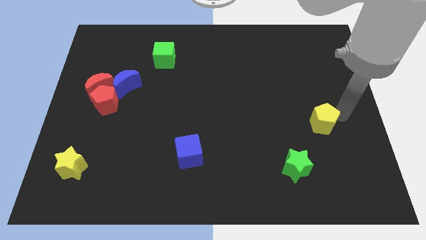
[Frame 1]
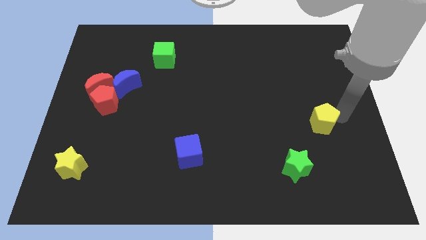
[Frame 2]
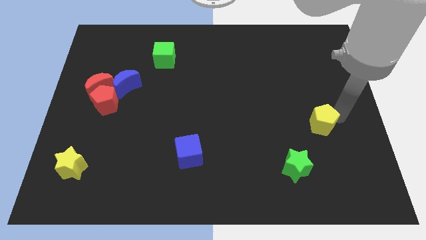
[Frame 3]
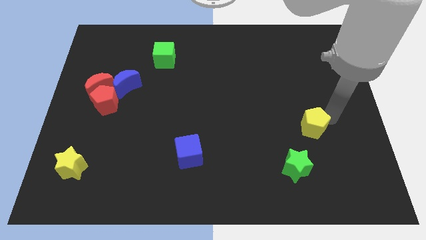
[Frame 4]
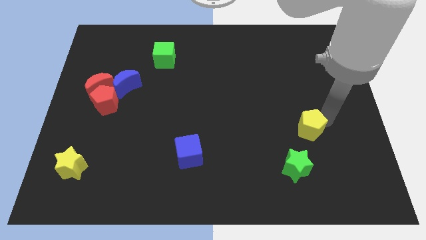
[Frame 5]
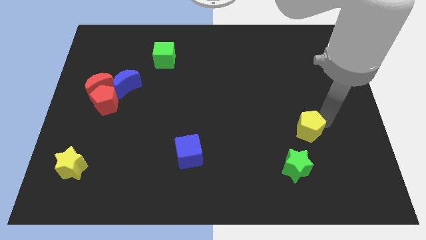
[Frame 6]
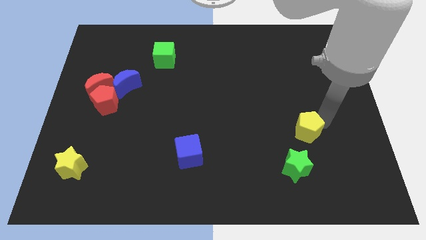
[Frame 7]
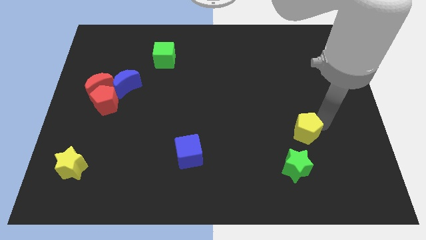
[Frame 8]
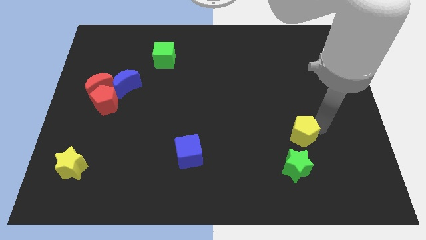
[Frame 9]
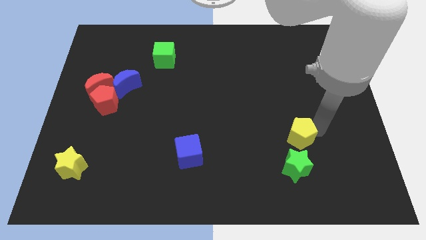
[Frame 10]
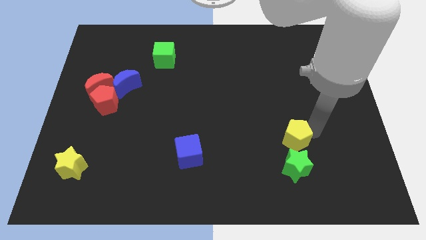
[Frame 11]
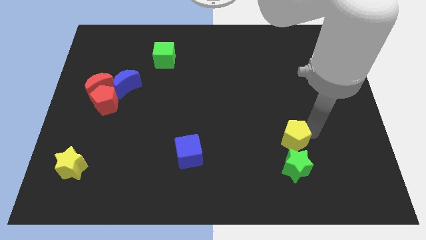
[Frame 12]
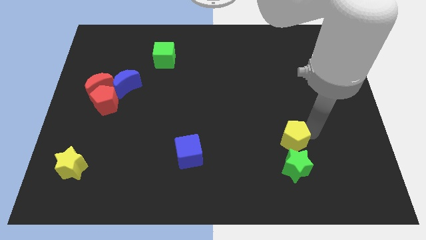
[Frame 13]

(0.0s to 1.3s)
push the yellow pentagon to the top of the green star

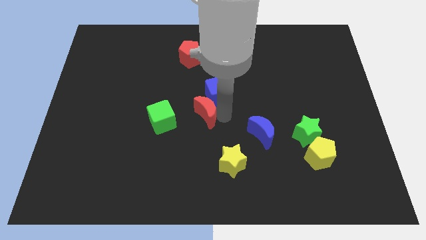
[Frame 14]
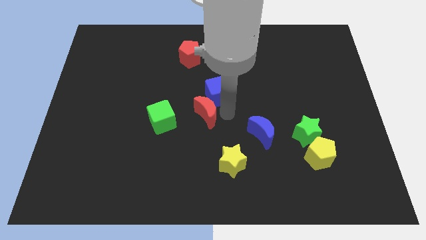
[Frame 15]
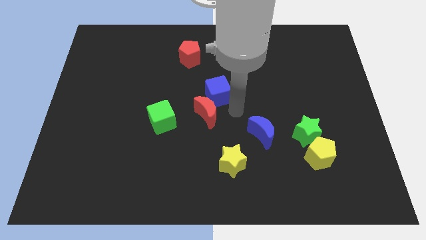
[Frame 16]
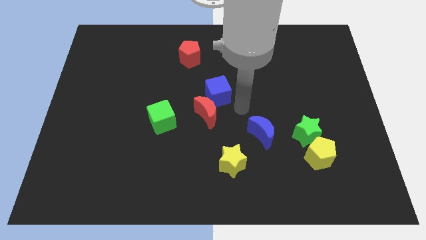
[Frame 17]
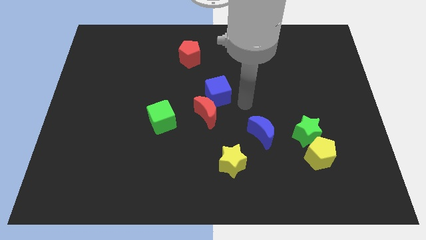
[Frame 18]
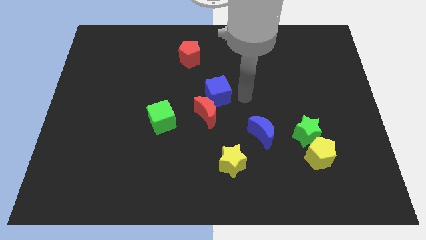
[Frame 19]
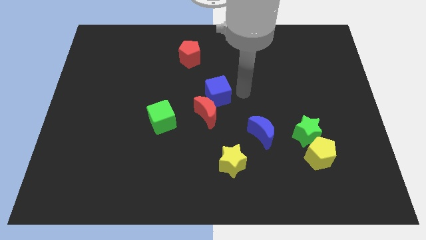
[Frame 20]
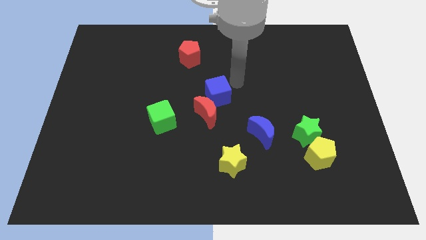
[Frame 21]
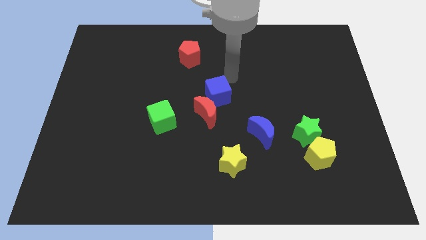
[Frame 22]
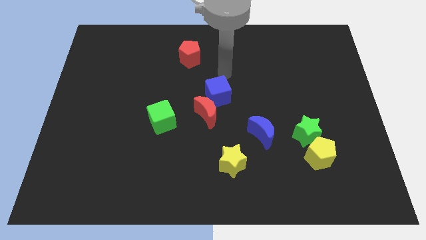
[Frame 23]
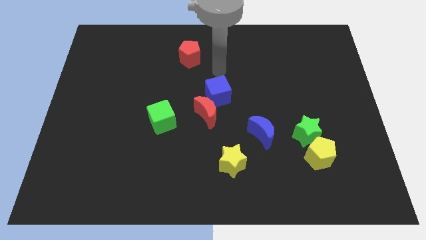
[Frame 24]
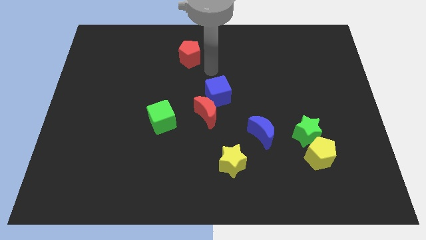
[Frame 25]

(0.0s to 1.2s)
move your arm away from red moon

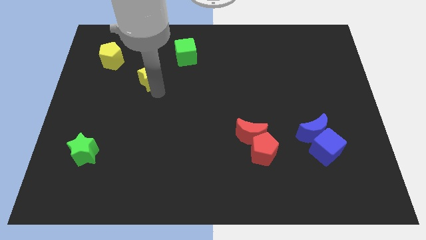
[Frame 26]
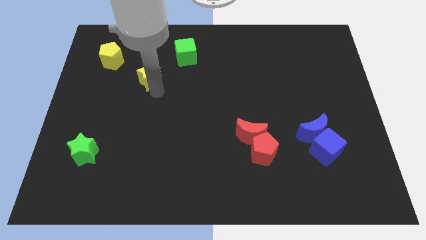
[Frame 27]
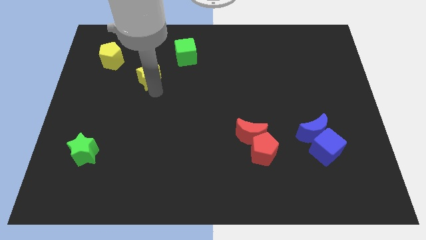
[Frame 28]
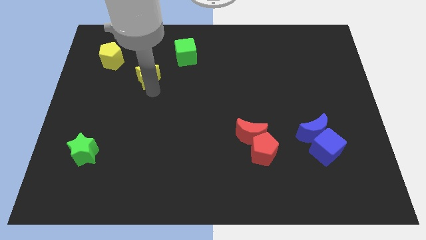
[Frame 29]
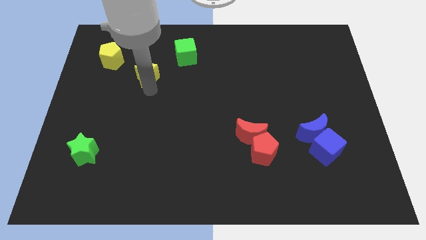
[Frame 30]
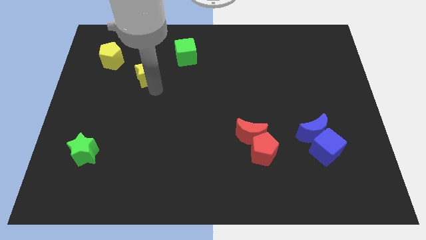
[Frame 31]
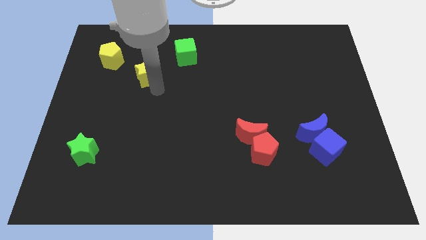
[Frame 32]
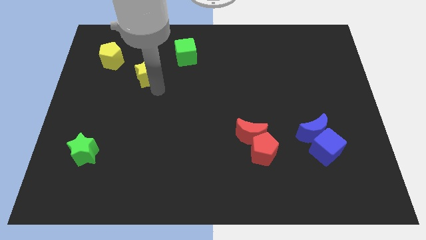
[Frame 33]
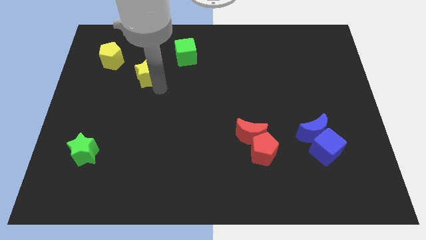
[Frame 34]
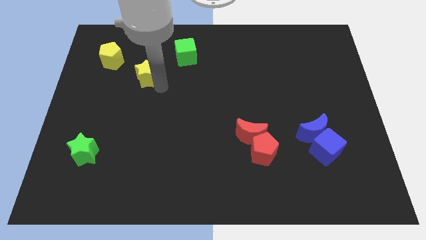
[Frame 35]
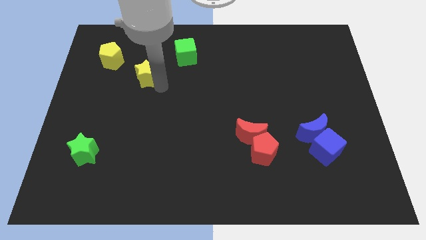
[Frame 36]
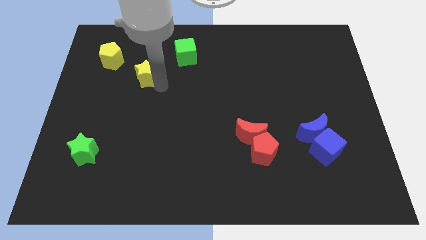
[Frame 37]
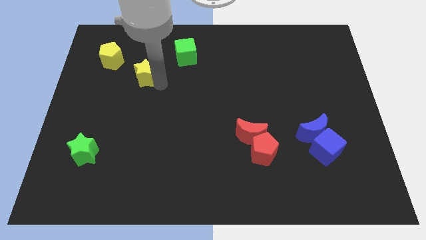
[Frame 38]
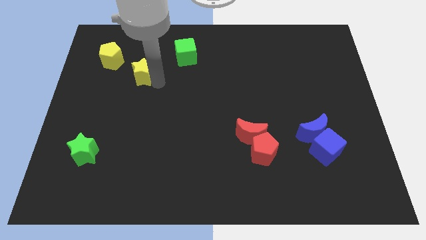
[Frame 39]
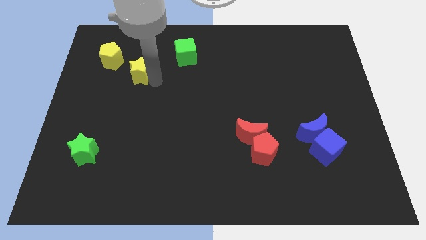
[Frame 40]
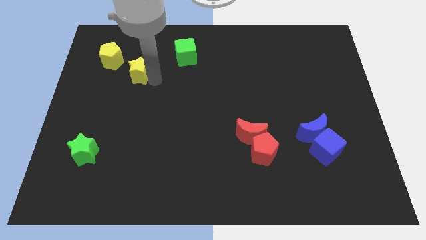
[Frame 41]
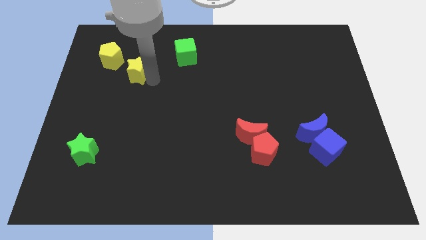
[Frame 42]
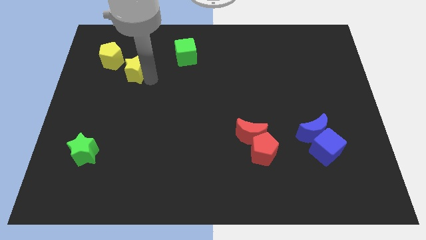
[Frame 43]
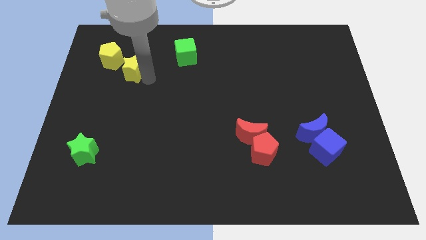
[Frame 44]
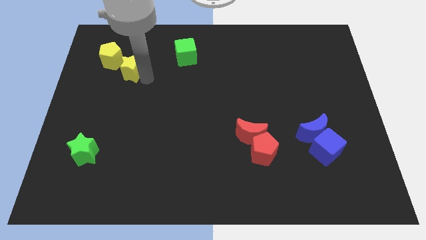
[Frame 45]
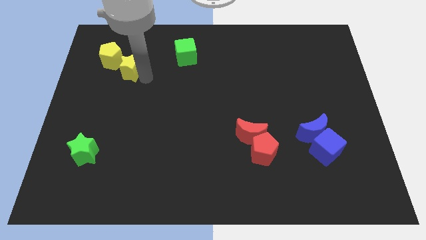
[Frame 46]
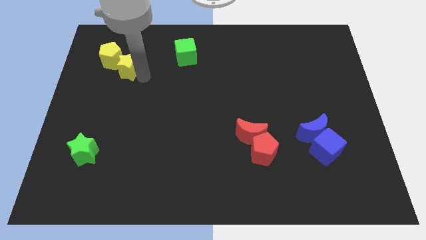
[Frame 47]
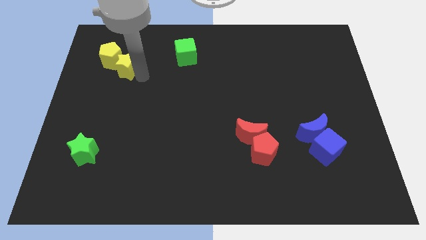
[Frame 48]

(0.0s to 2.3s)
push yellow star towards yellow pentagon

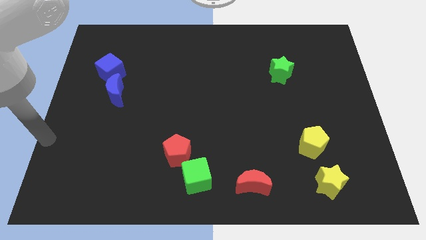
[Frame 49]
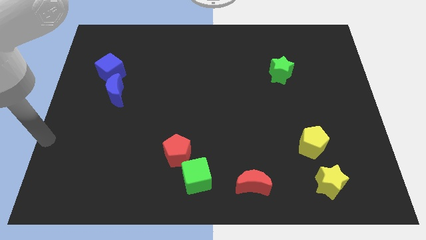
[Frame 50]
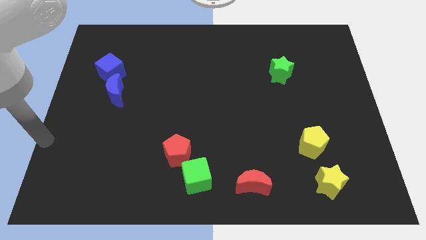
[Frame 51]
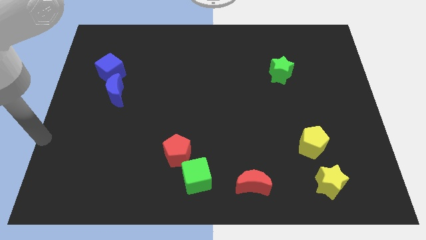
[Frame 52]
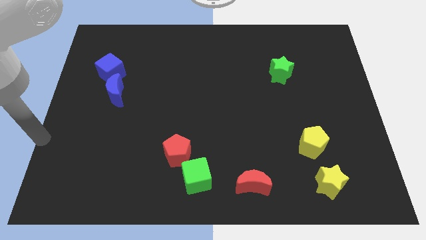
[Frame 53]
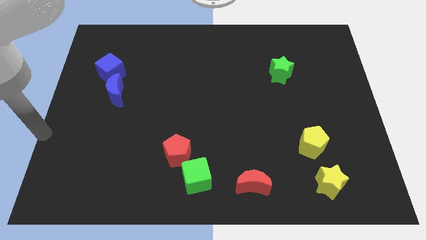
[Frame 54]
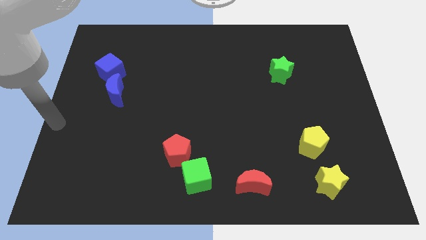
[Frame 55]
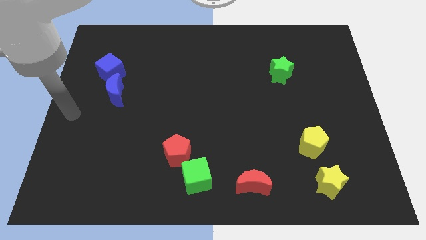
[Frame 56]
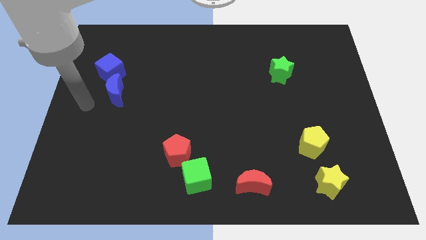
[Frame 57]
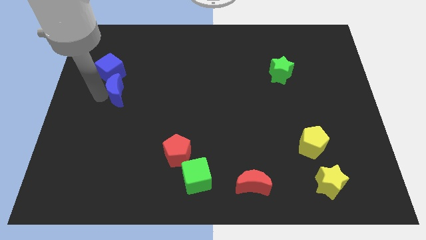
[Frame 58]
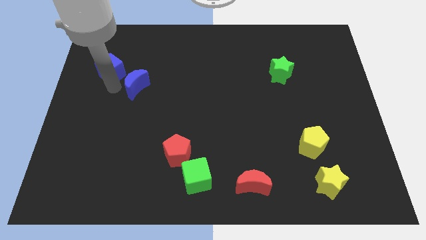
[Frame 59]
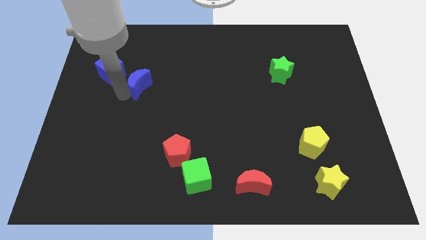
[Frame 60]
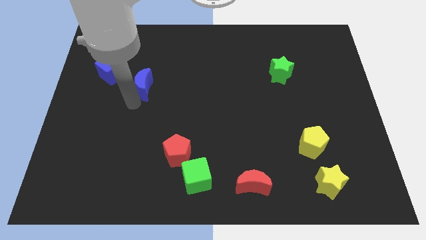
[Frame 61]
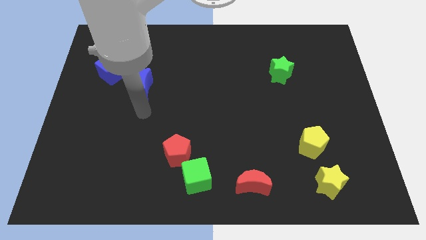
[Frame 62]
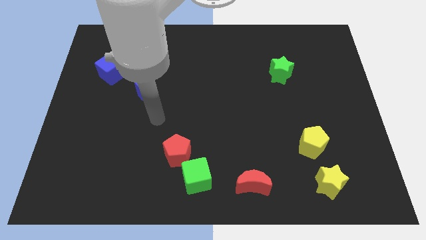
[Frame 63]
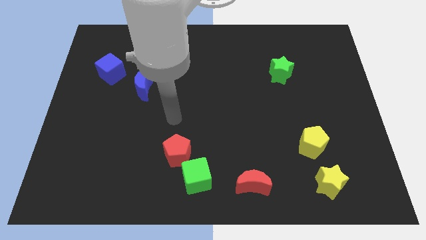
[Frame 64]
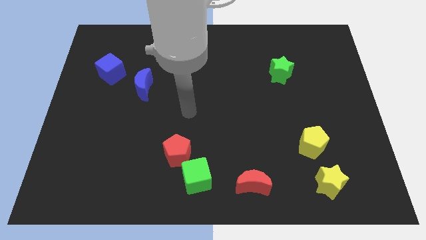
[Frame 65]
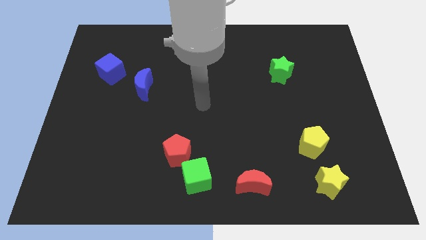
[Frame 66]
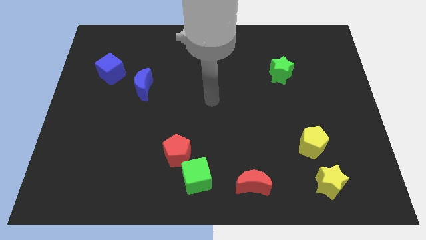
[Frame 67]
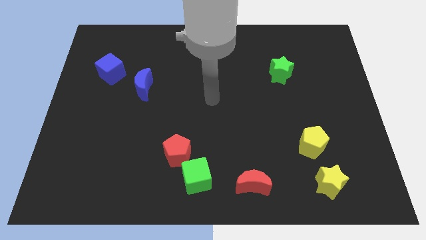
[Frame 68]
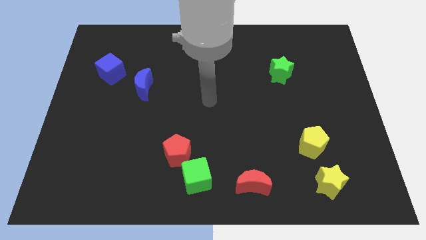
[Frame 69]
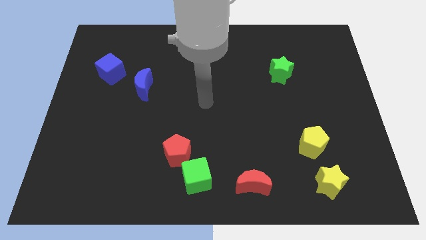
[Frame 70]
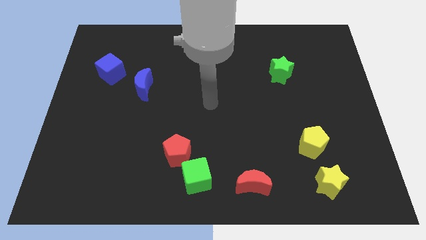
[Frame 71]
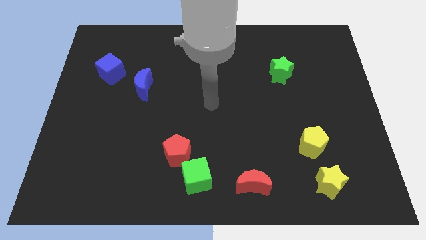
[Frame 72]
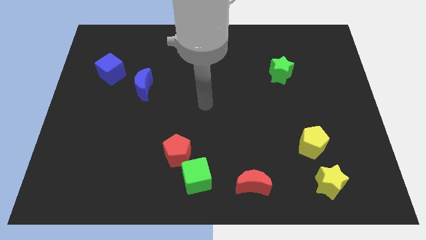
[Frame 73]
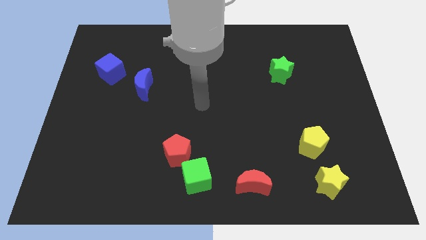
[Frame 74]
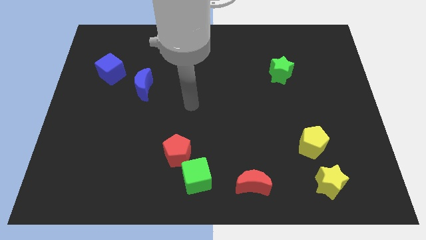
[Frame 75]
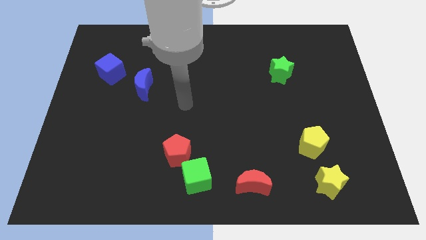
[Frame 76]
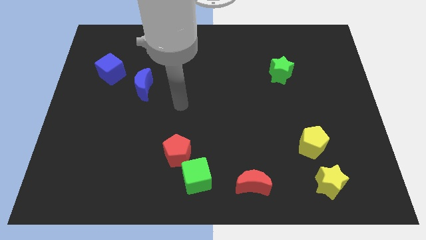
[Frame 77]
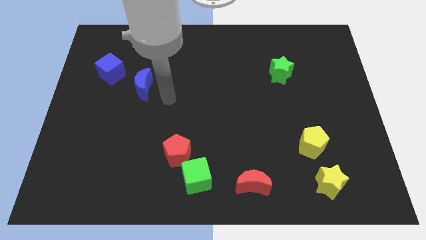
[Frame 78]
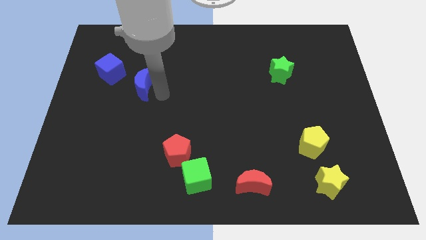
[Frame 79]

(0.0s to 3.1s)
separate blue moon and blue cube

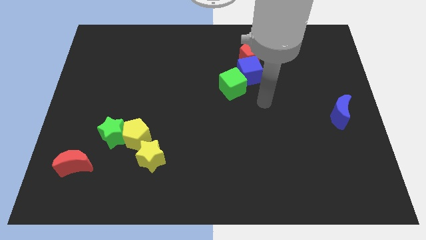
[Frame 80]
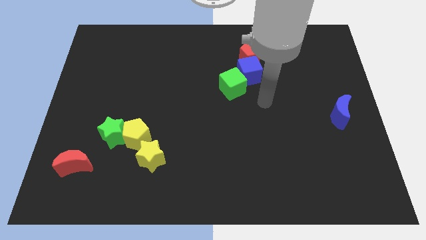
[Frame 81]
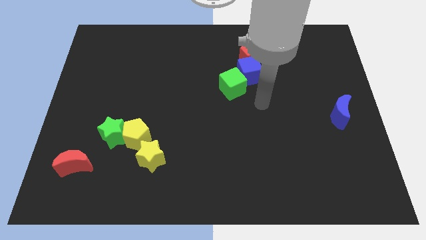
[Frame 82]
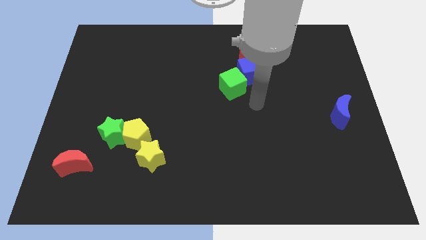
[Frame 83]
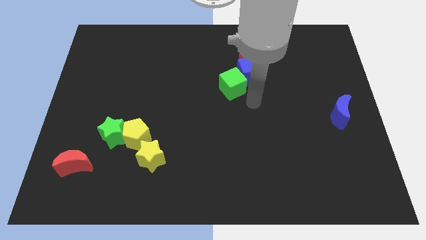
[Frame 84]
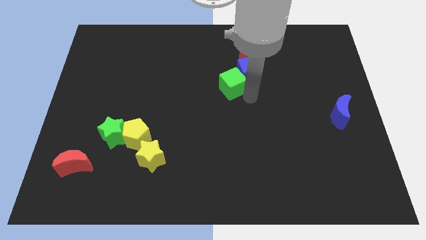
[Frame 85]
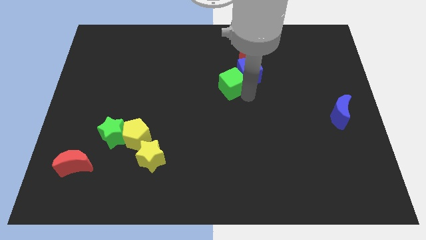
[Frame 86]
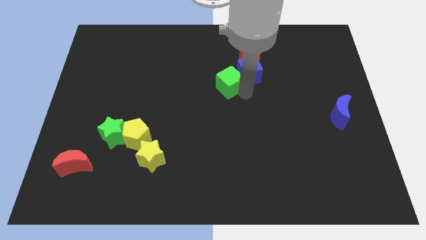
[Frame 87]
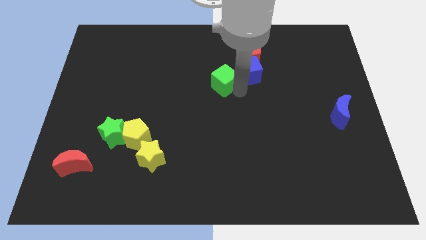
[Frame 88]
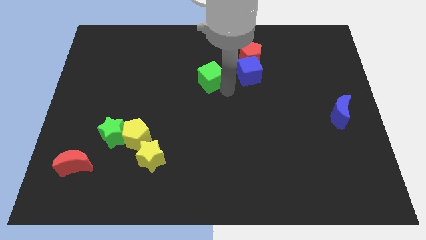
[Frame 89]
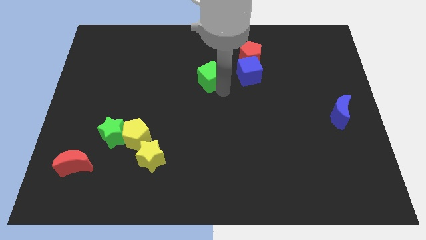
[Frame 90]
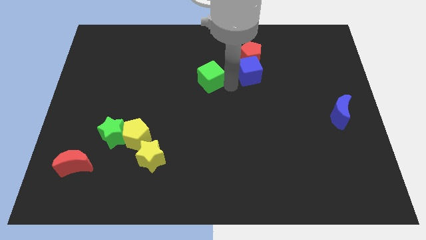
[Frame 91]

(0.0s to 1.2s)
place the green cube left to the blue cube
